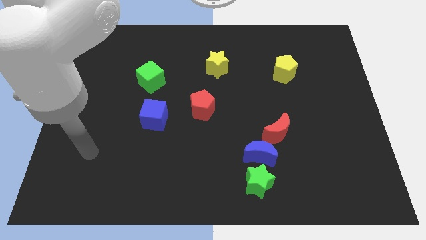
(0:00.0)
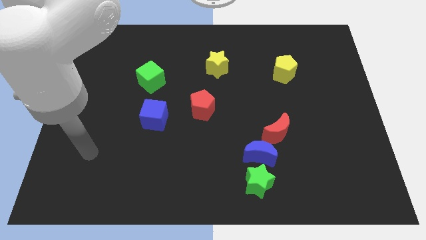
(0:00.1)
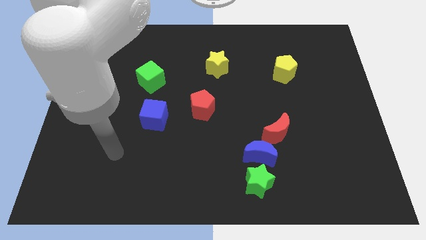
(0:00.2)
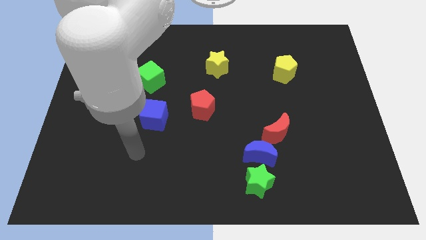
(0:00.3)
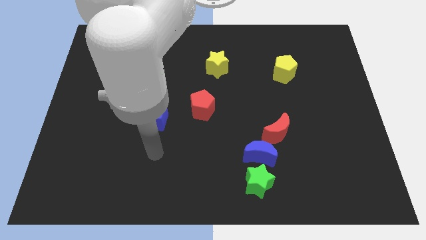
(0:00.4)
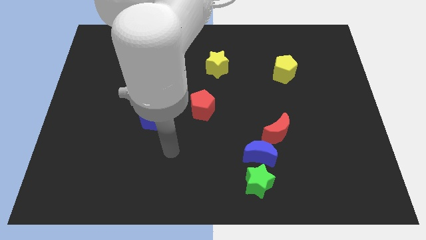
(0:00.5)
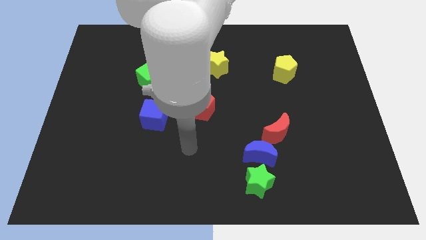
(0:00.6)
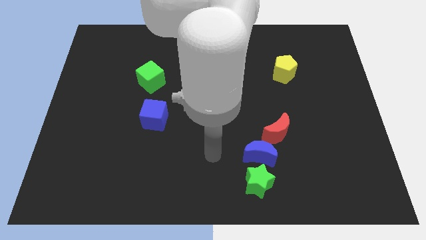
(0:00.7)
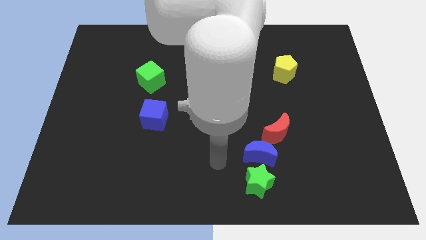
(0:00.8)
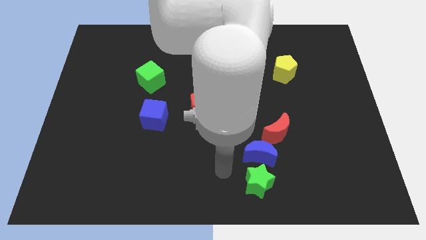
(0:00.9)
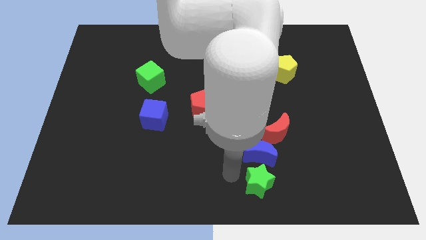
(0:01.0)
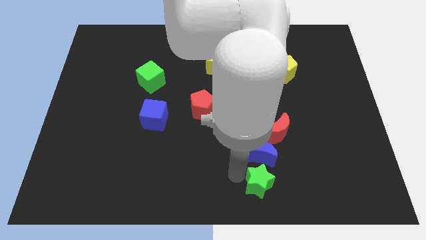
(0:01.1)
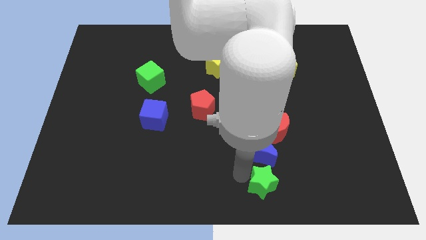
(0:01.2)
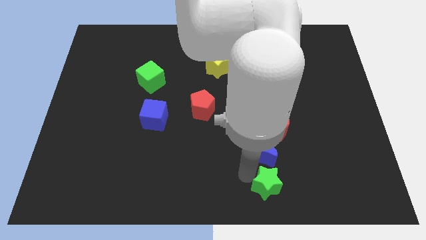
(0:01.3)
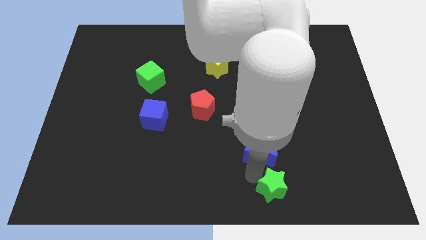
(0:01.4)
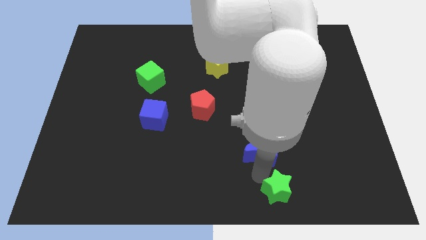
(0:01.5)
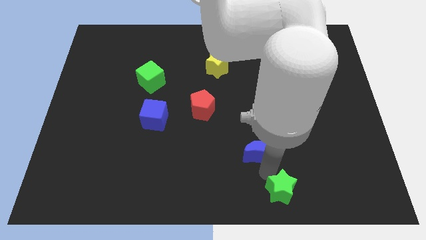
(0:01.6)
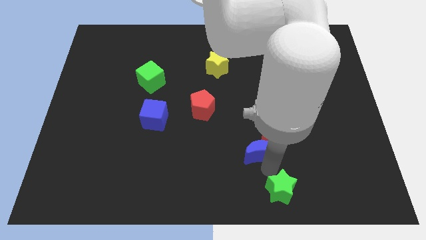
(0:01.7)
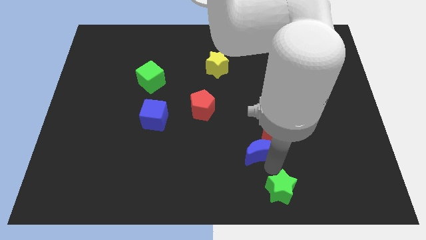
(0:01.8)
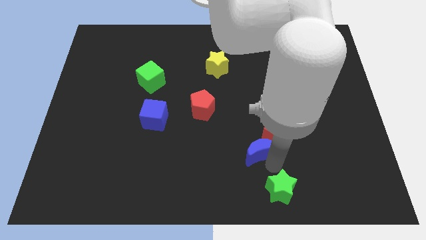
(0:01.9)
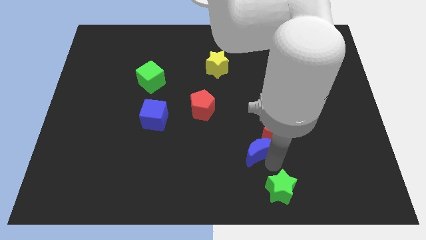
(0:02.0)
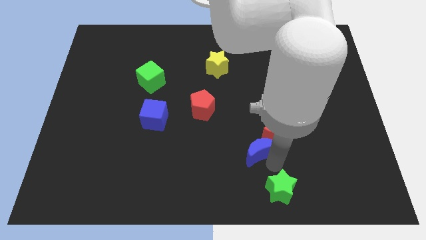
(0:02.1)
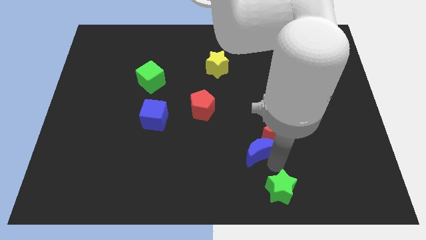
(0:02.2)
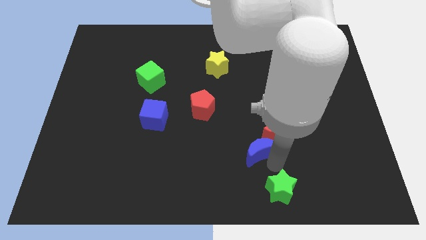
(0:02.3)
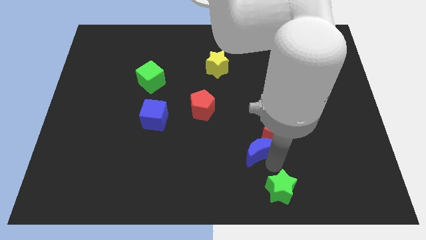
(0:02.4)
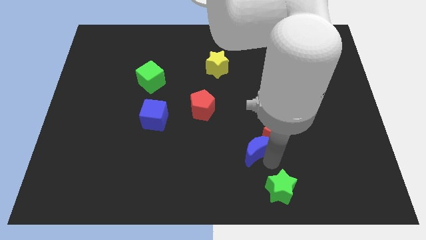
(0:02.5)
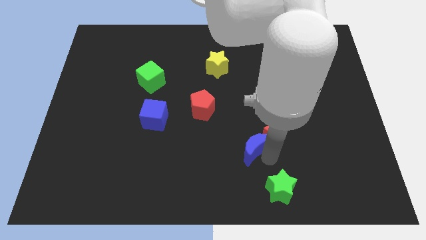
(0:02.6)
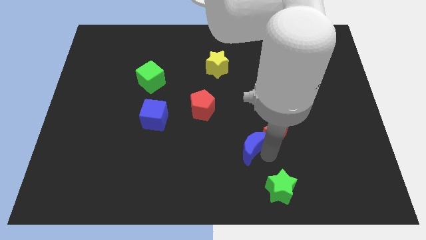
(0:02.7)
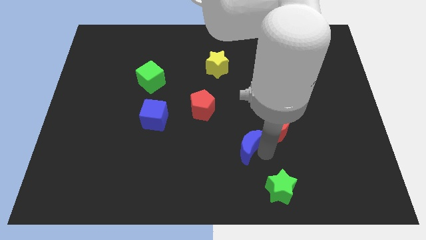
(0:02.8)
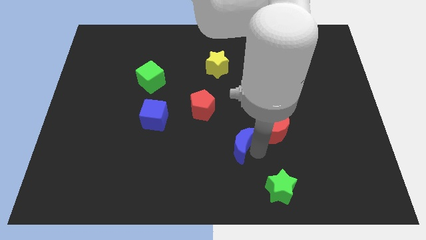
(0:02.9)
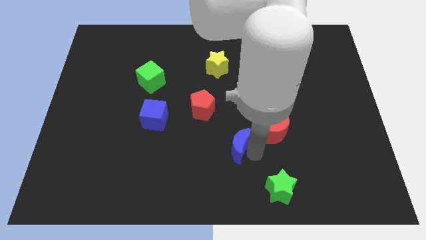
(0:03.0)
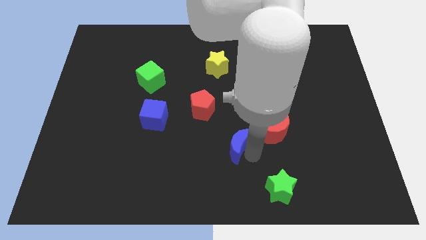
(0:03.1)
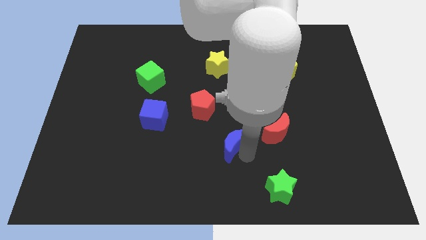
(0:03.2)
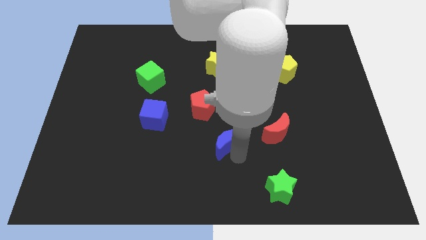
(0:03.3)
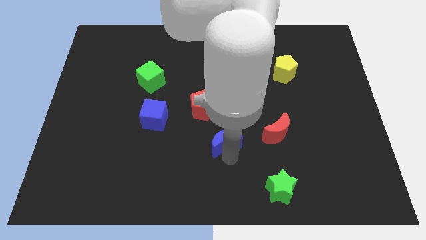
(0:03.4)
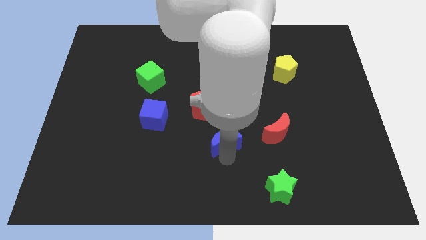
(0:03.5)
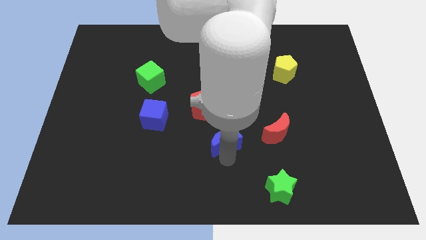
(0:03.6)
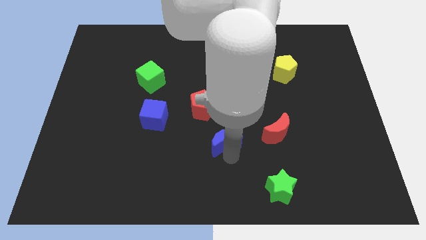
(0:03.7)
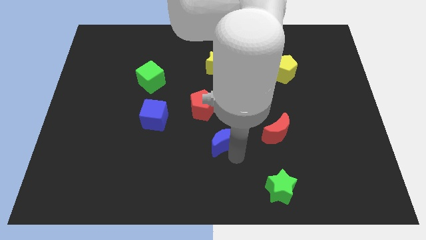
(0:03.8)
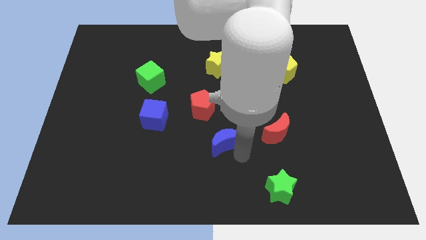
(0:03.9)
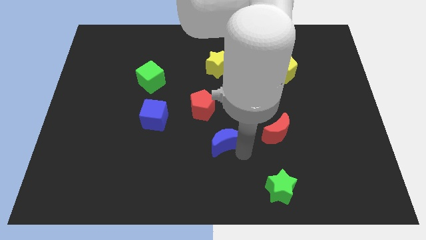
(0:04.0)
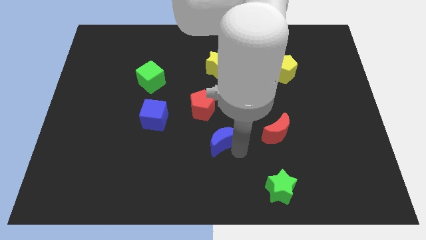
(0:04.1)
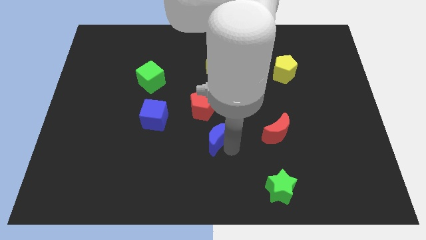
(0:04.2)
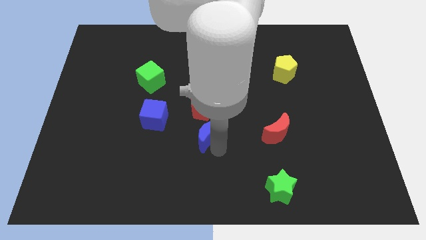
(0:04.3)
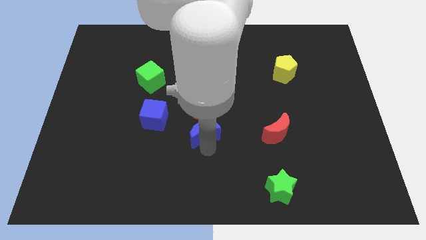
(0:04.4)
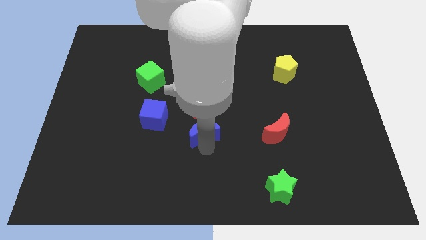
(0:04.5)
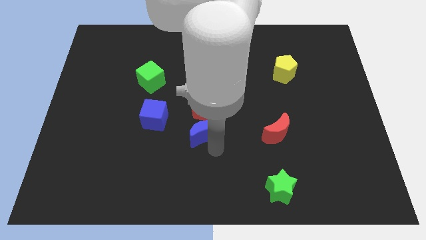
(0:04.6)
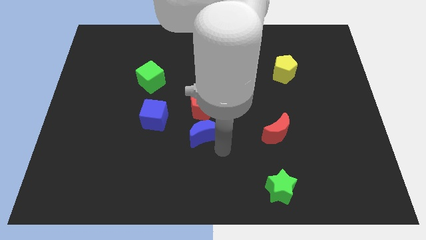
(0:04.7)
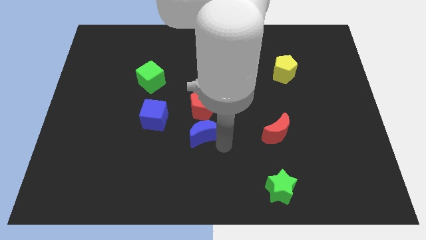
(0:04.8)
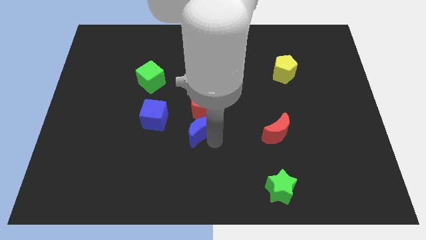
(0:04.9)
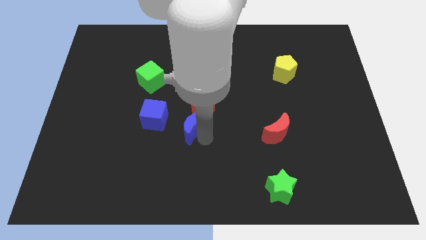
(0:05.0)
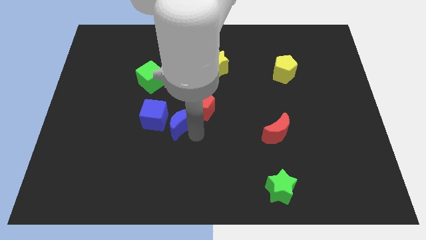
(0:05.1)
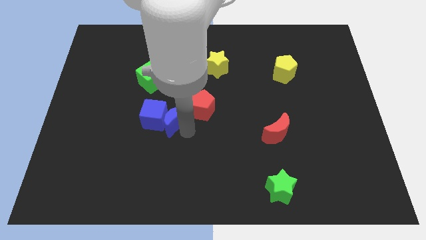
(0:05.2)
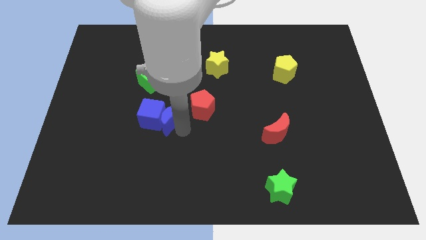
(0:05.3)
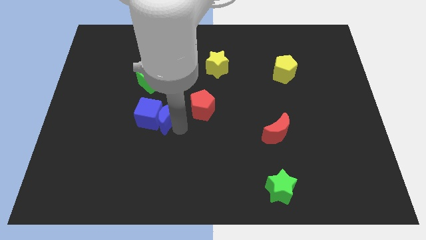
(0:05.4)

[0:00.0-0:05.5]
put the blue moon next to the blue cube

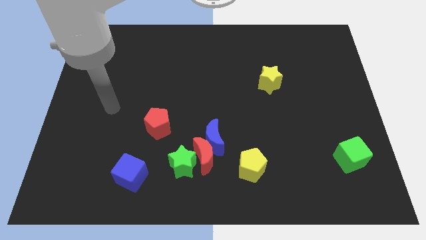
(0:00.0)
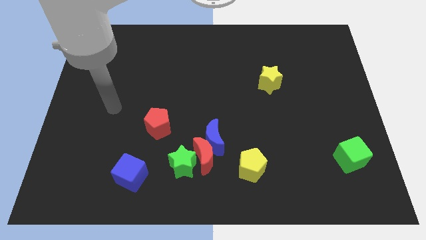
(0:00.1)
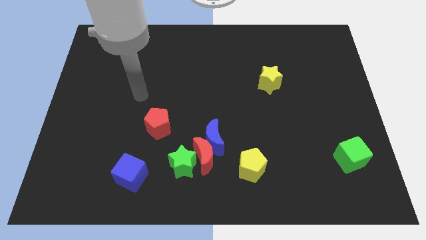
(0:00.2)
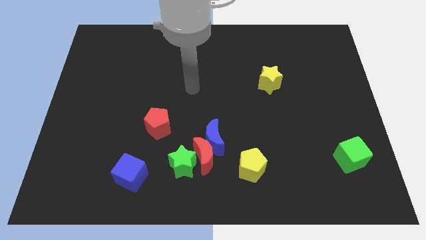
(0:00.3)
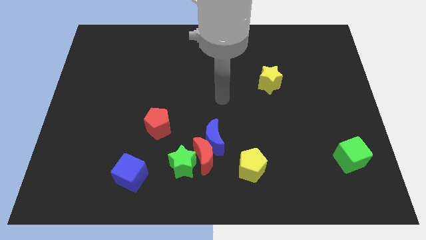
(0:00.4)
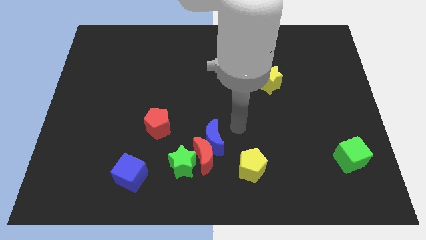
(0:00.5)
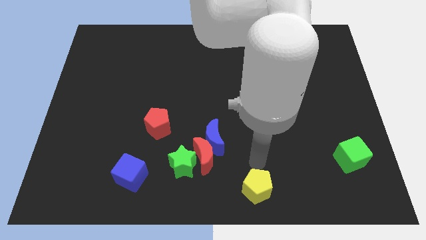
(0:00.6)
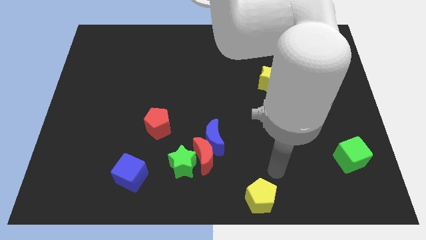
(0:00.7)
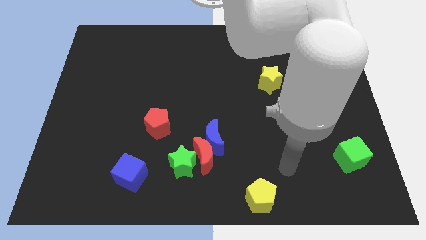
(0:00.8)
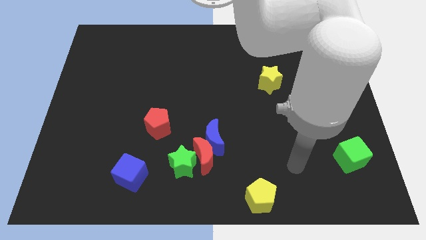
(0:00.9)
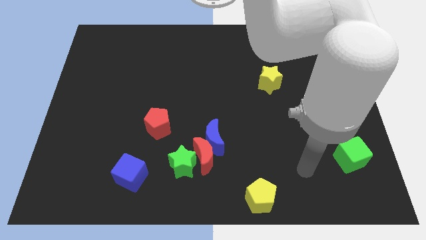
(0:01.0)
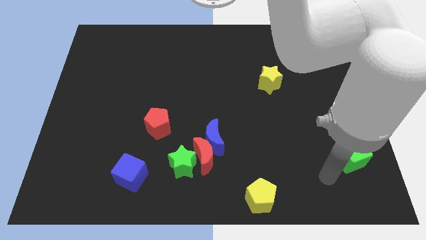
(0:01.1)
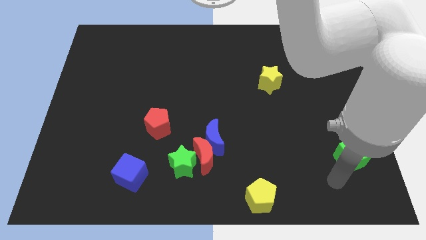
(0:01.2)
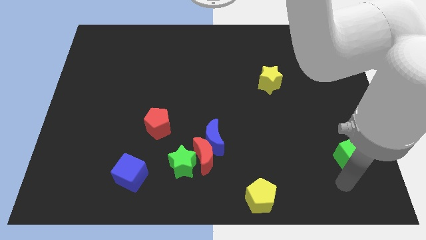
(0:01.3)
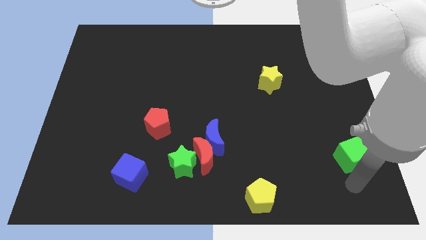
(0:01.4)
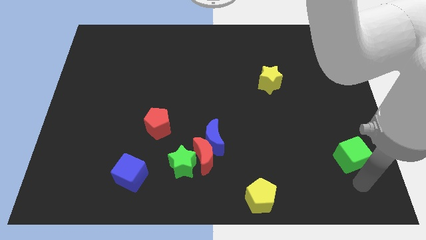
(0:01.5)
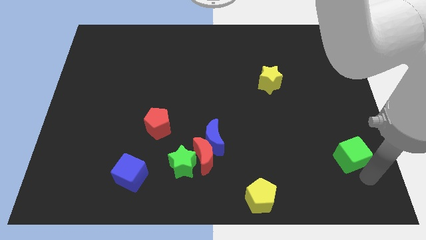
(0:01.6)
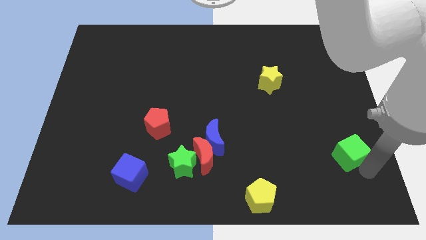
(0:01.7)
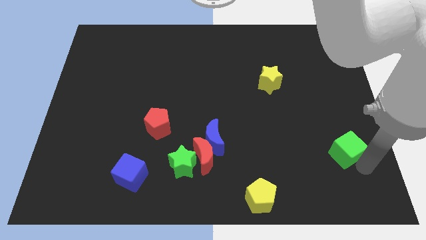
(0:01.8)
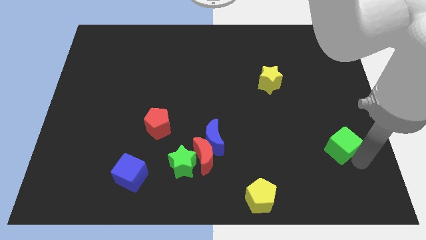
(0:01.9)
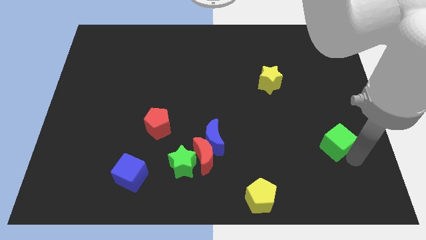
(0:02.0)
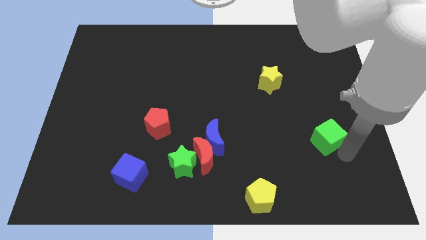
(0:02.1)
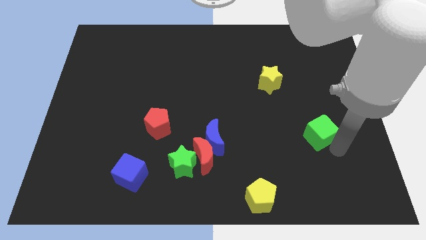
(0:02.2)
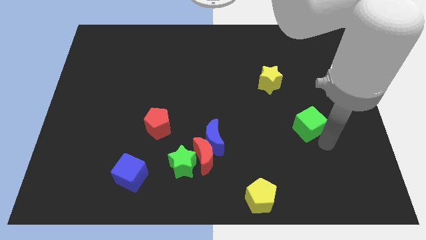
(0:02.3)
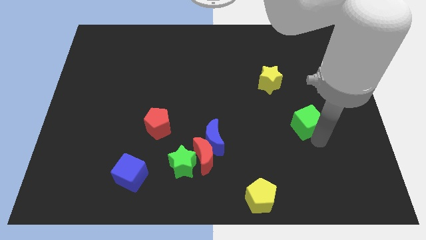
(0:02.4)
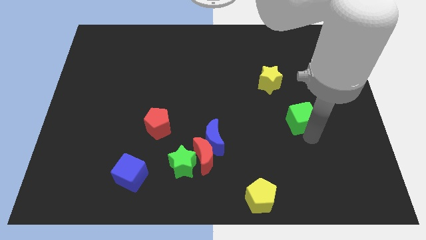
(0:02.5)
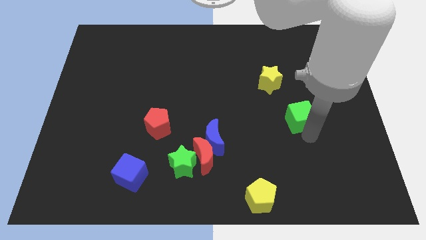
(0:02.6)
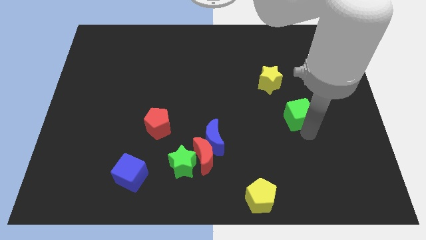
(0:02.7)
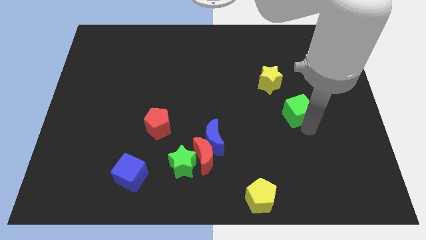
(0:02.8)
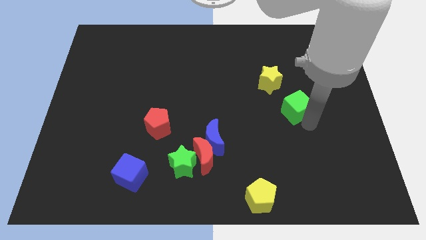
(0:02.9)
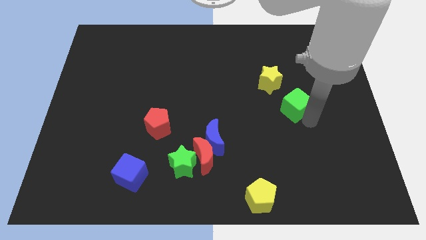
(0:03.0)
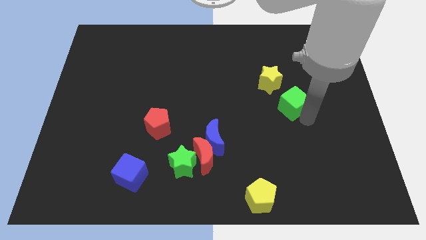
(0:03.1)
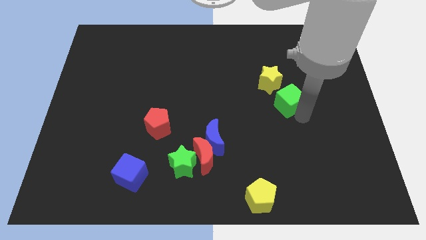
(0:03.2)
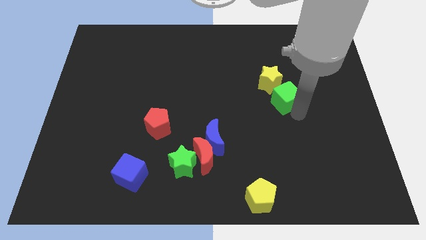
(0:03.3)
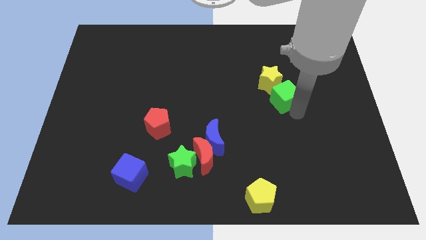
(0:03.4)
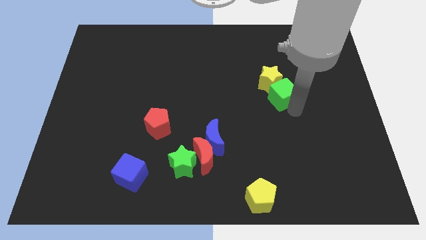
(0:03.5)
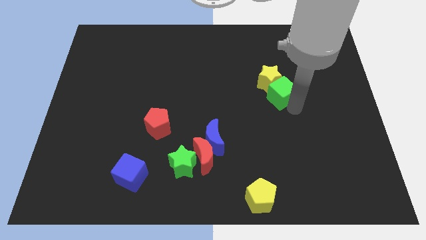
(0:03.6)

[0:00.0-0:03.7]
push the green cube close to the yellow star
